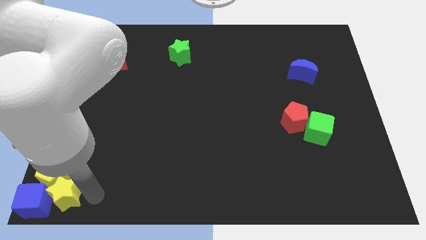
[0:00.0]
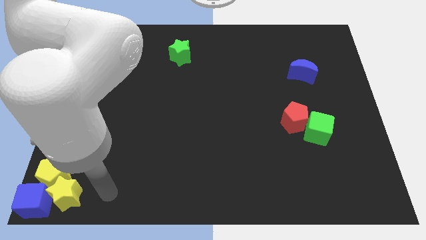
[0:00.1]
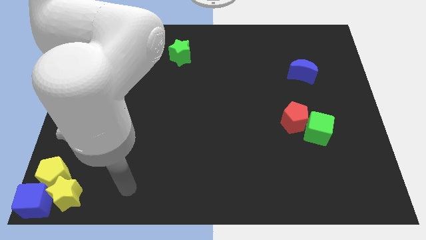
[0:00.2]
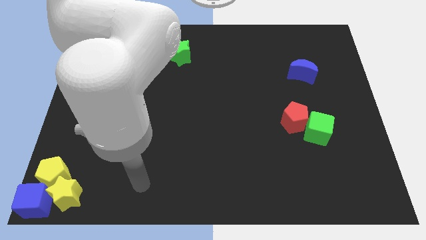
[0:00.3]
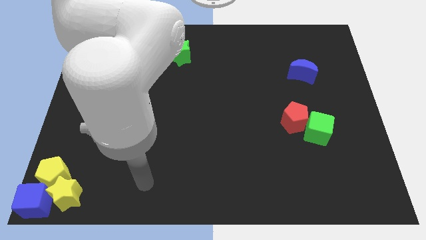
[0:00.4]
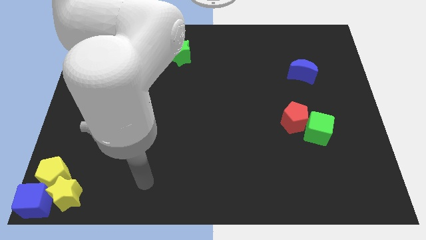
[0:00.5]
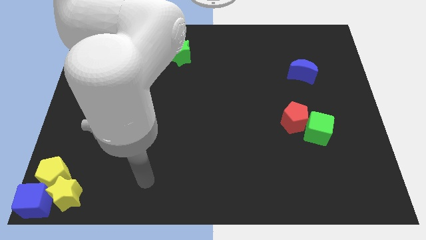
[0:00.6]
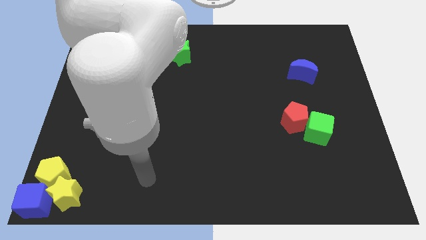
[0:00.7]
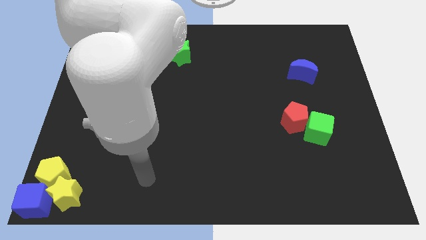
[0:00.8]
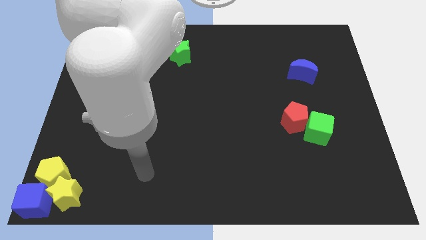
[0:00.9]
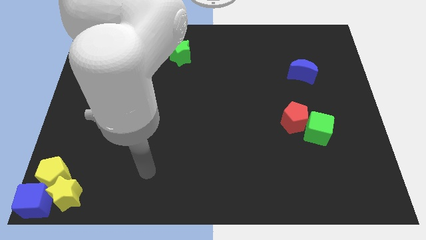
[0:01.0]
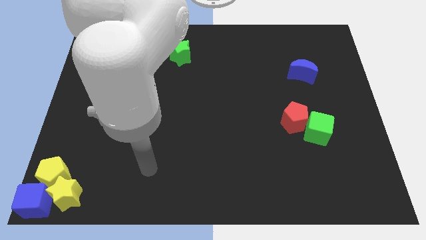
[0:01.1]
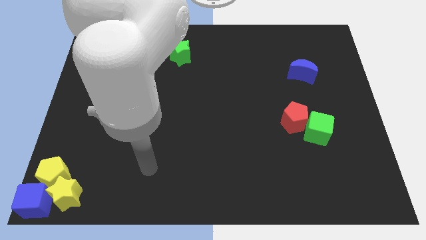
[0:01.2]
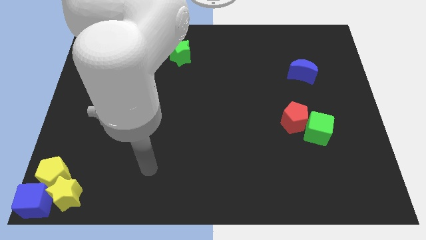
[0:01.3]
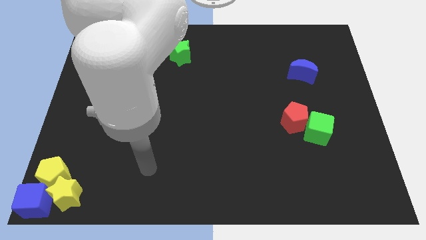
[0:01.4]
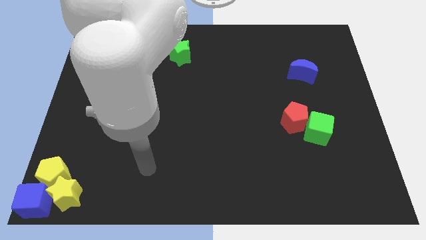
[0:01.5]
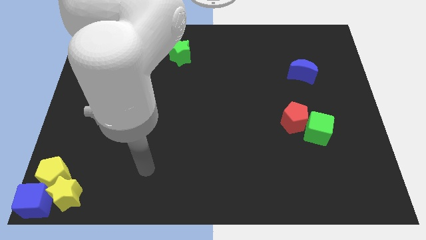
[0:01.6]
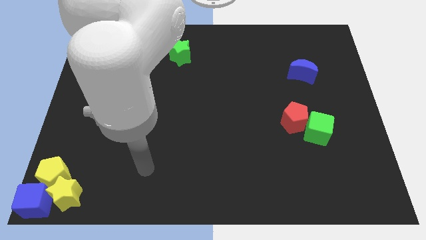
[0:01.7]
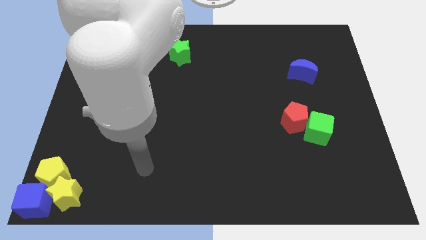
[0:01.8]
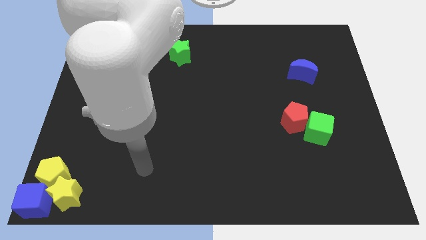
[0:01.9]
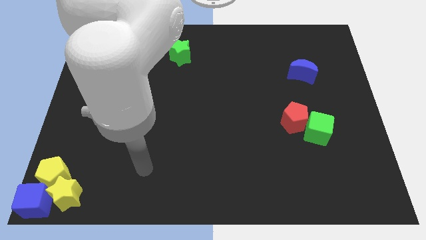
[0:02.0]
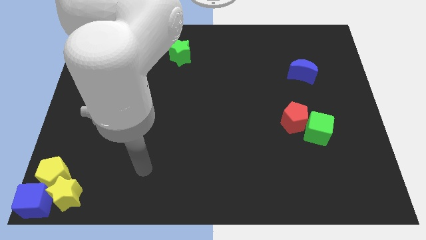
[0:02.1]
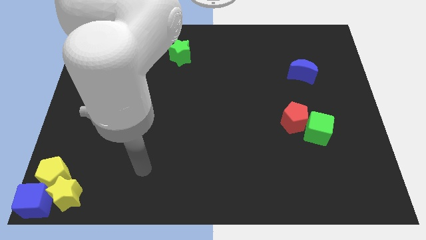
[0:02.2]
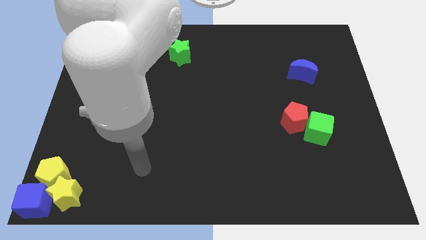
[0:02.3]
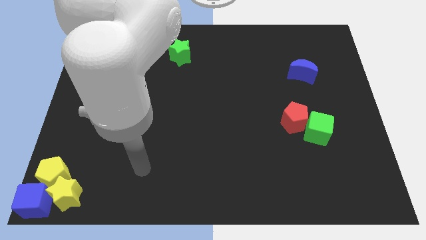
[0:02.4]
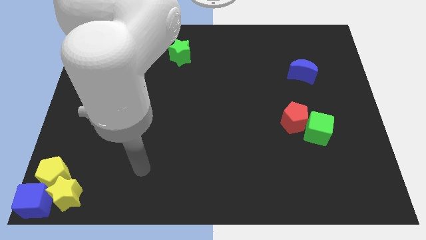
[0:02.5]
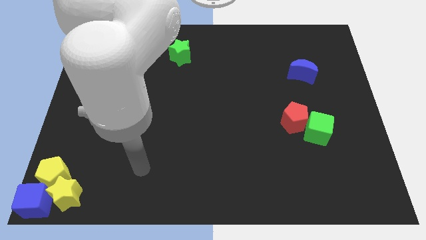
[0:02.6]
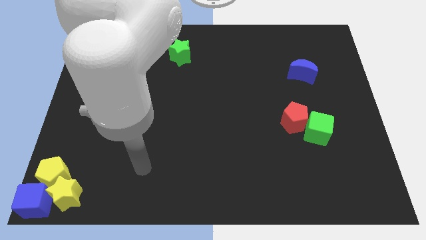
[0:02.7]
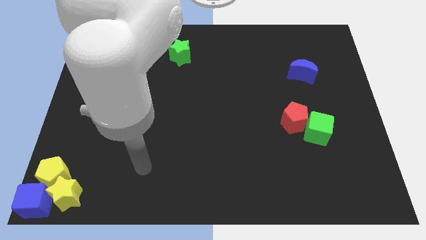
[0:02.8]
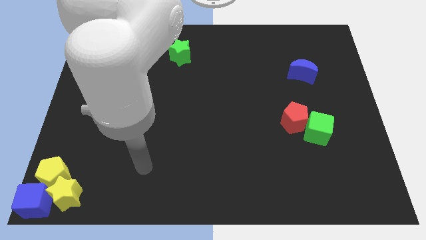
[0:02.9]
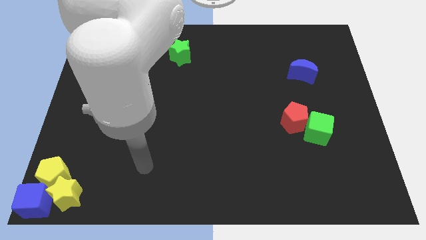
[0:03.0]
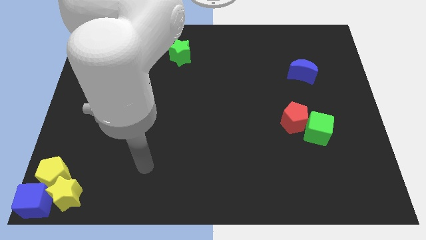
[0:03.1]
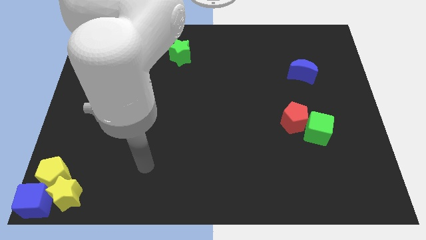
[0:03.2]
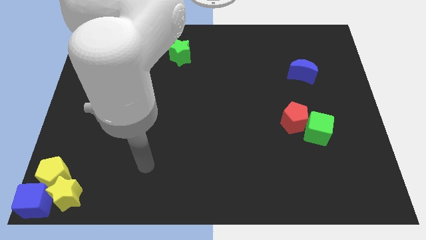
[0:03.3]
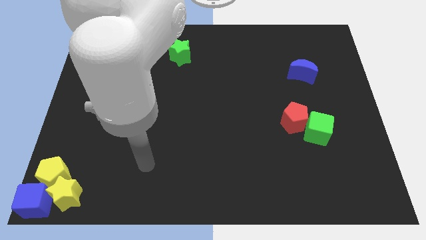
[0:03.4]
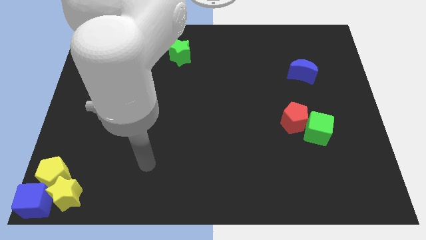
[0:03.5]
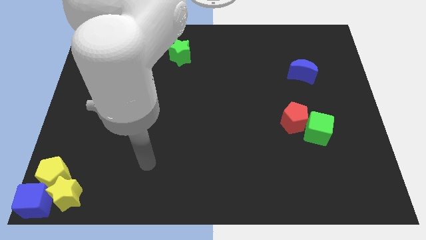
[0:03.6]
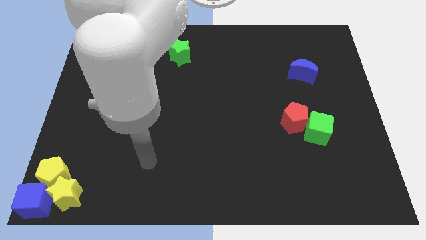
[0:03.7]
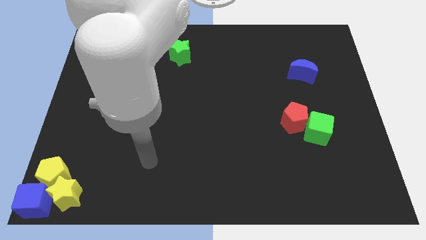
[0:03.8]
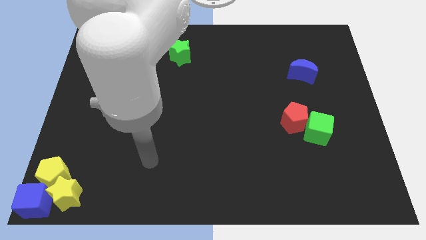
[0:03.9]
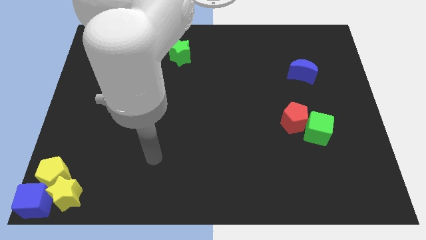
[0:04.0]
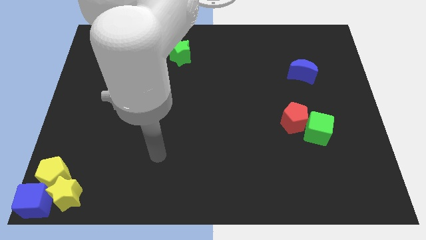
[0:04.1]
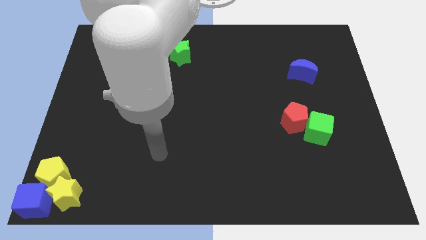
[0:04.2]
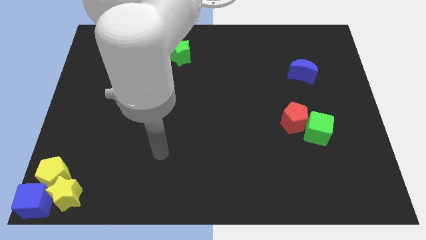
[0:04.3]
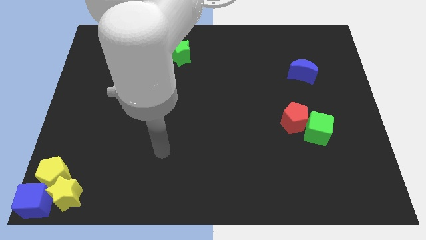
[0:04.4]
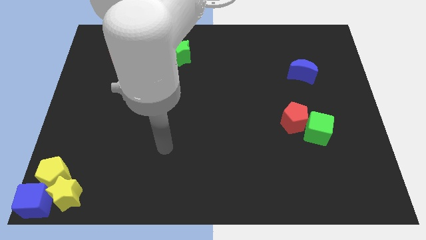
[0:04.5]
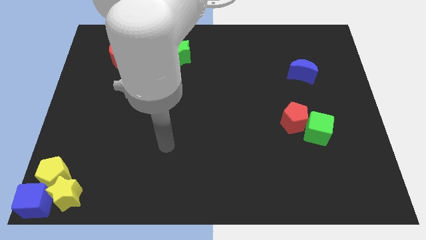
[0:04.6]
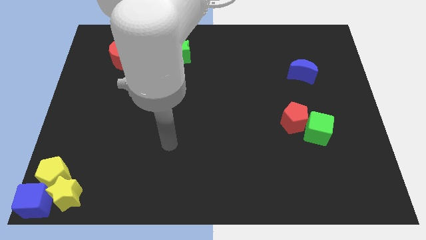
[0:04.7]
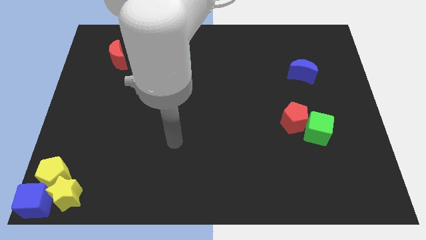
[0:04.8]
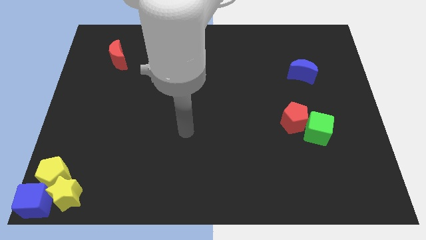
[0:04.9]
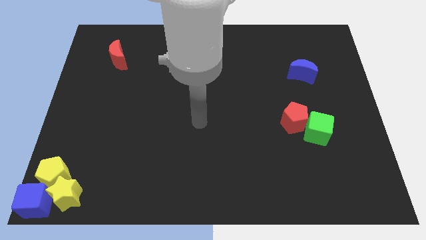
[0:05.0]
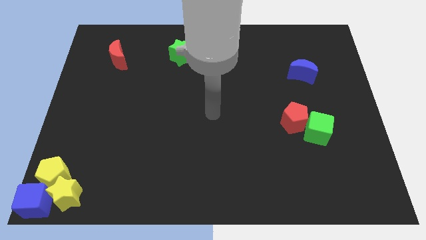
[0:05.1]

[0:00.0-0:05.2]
point your arm at the center of the board

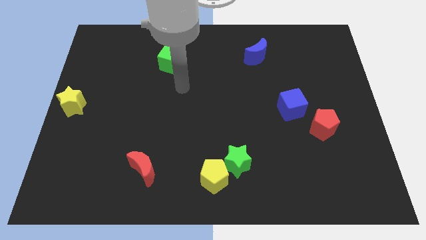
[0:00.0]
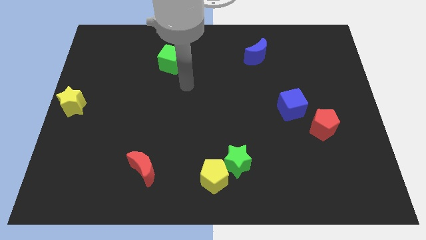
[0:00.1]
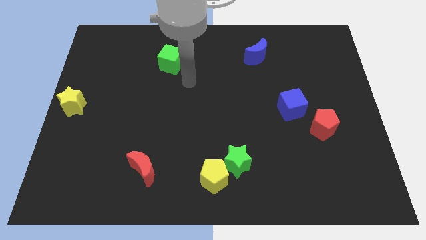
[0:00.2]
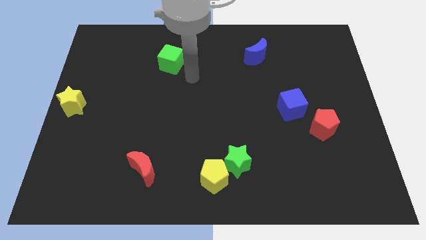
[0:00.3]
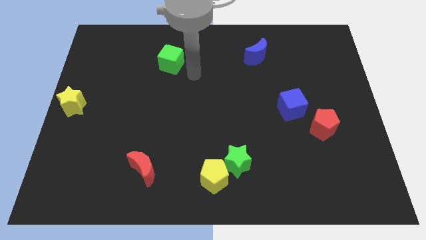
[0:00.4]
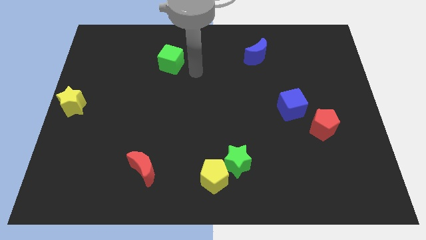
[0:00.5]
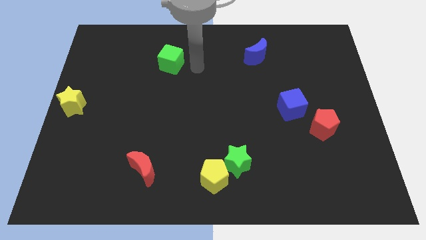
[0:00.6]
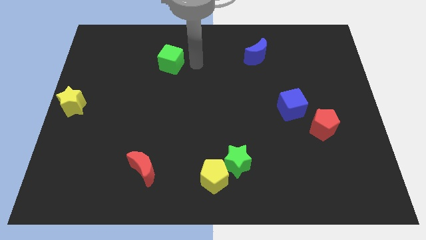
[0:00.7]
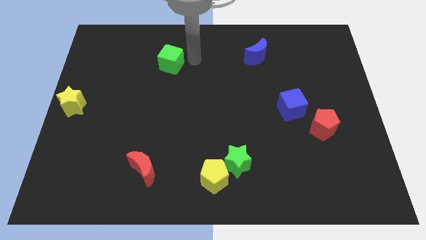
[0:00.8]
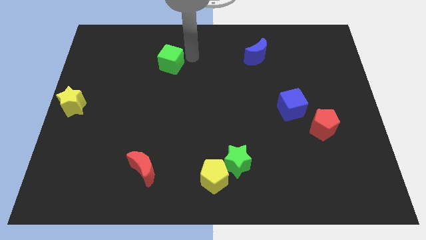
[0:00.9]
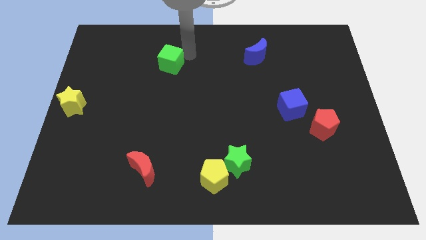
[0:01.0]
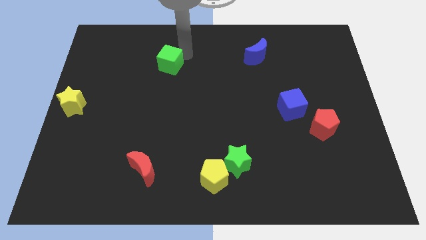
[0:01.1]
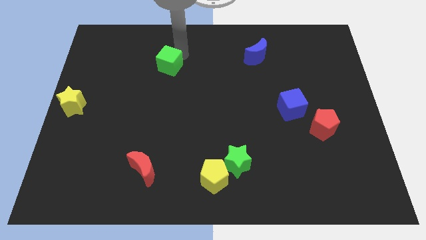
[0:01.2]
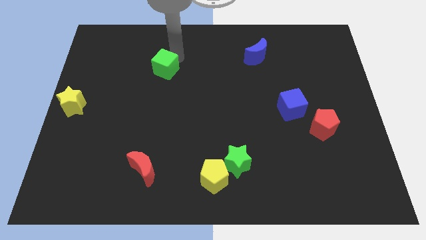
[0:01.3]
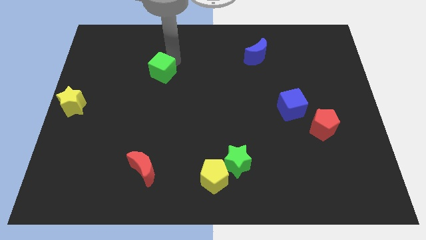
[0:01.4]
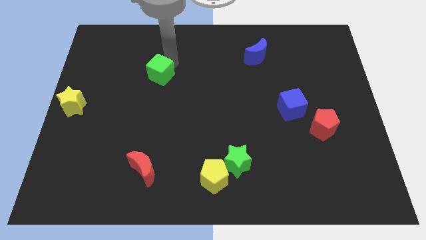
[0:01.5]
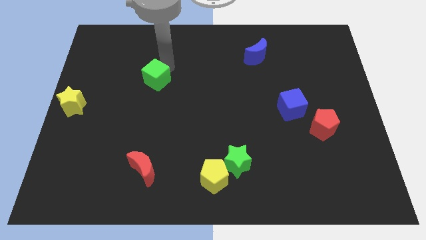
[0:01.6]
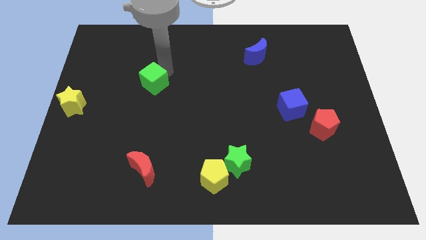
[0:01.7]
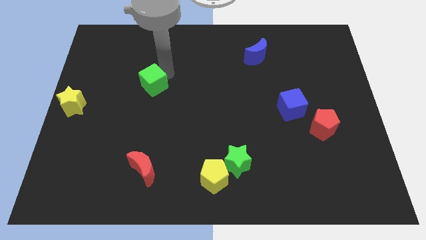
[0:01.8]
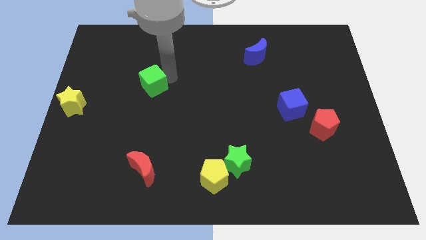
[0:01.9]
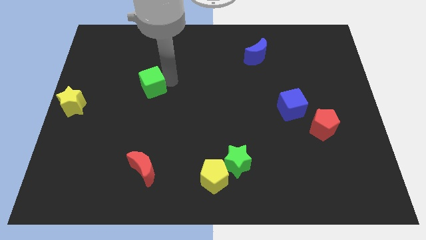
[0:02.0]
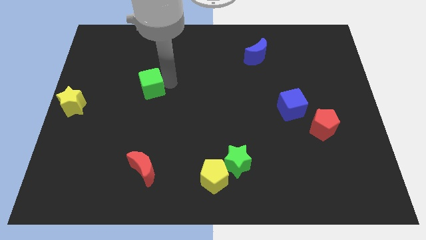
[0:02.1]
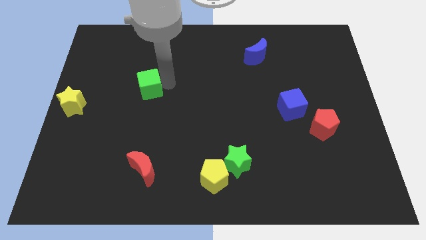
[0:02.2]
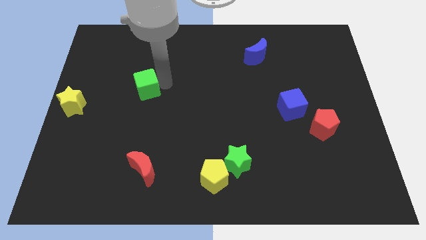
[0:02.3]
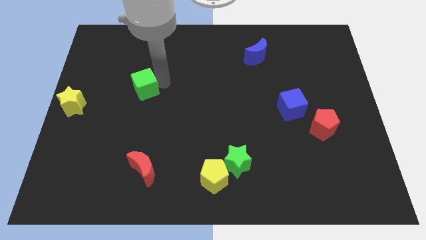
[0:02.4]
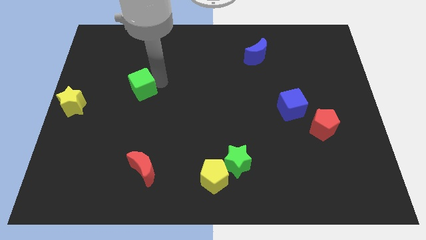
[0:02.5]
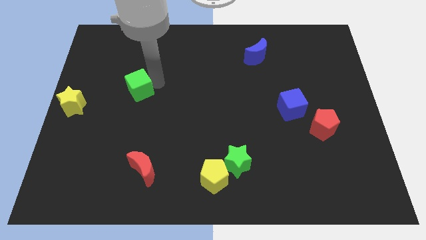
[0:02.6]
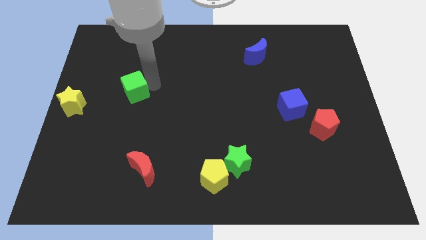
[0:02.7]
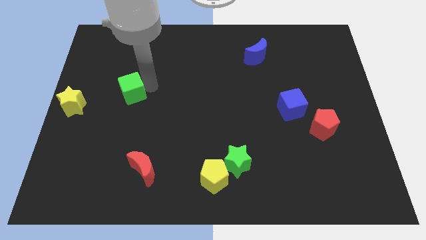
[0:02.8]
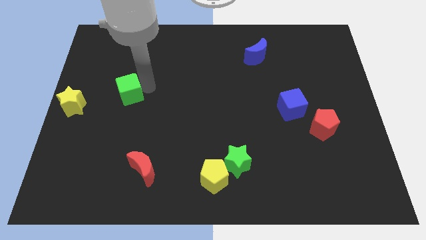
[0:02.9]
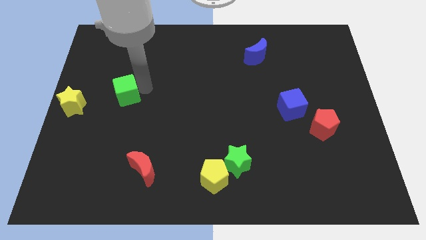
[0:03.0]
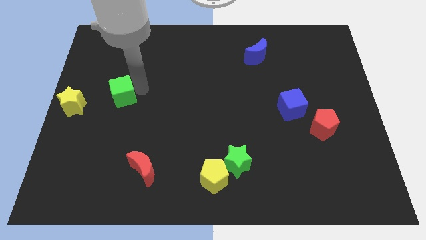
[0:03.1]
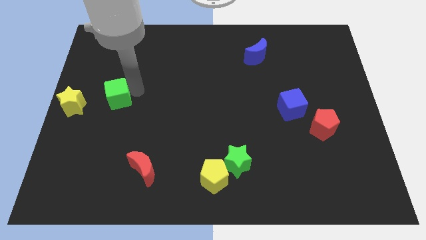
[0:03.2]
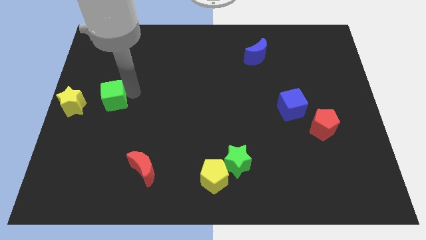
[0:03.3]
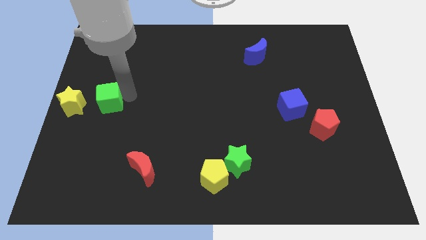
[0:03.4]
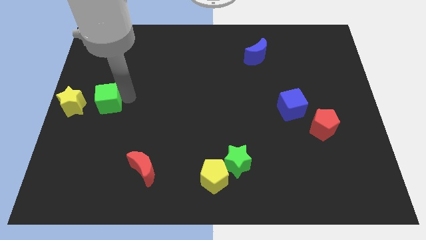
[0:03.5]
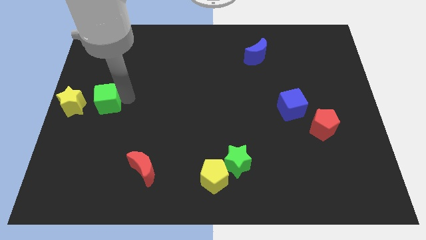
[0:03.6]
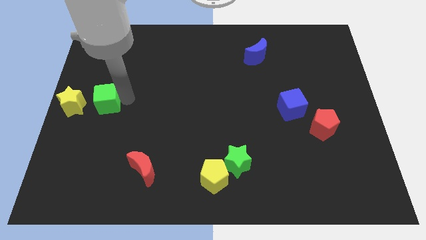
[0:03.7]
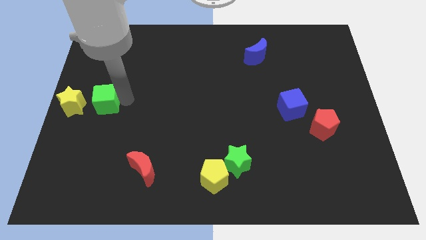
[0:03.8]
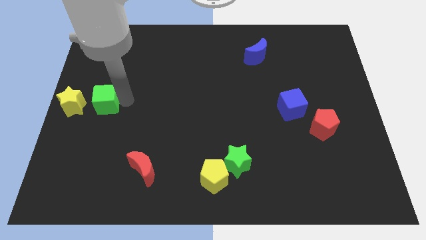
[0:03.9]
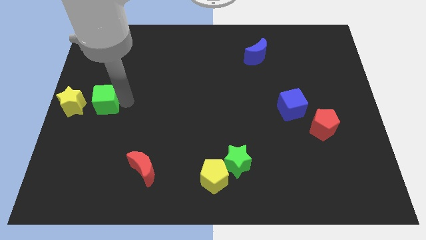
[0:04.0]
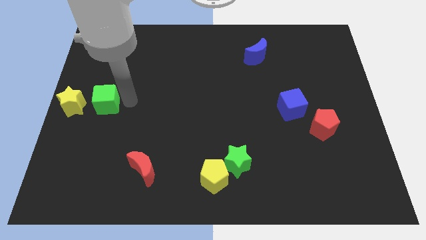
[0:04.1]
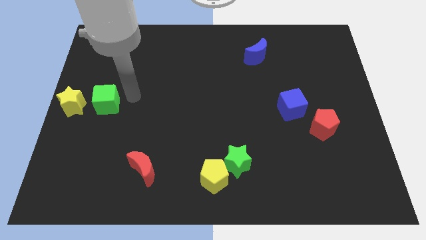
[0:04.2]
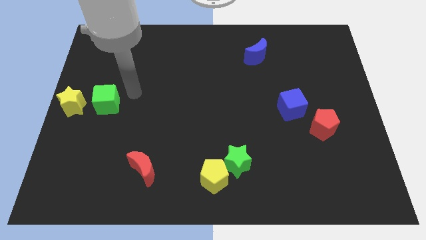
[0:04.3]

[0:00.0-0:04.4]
push the green cube to the right side of the yellow star
